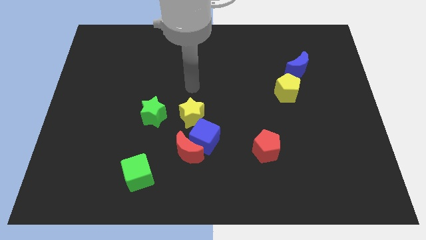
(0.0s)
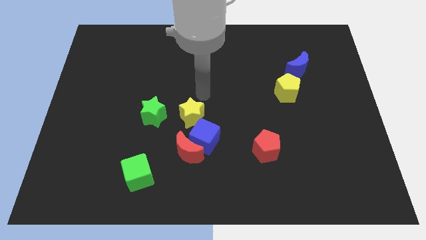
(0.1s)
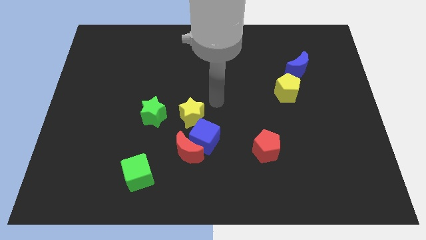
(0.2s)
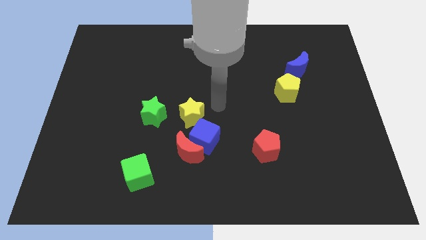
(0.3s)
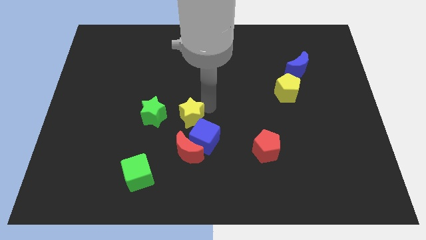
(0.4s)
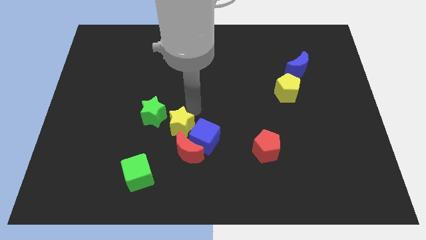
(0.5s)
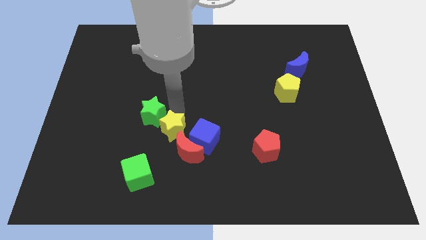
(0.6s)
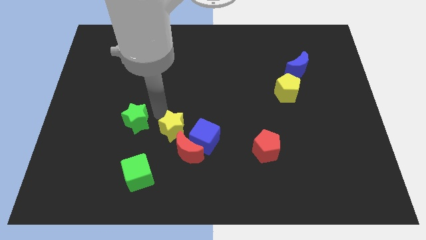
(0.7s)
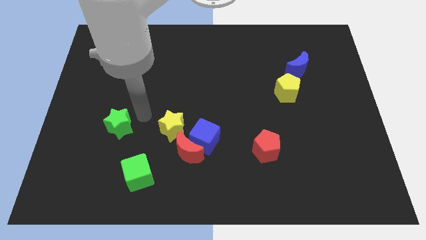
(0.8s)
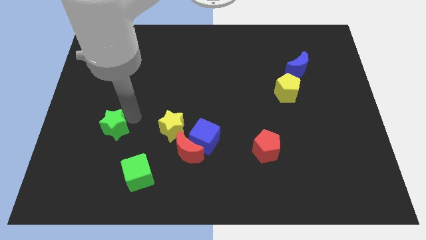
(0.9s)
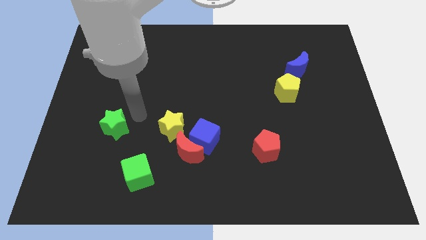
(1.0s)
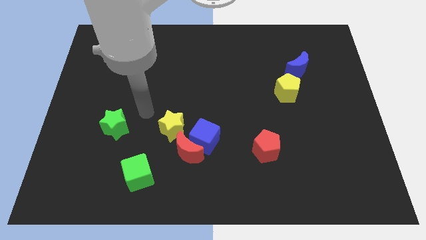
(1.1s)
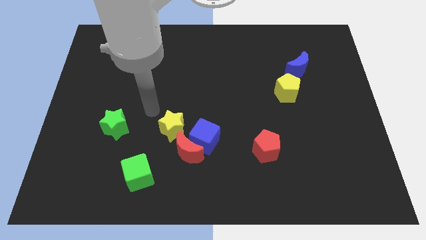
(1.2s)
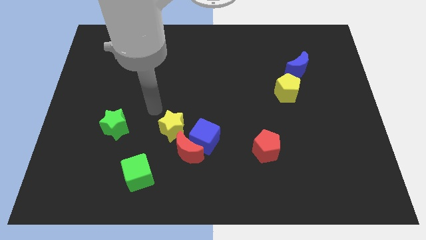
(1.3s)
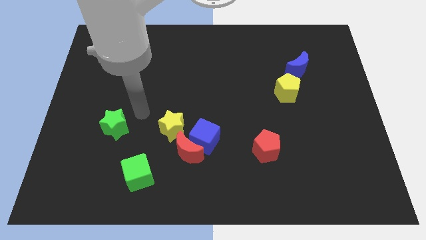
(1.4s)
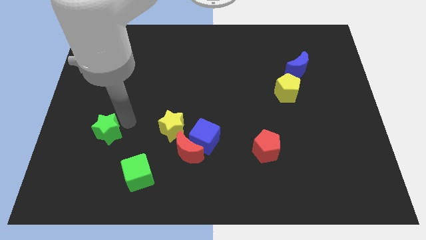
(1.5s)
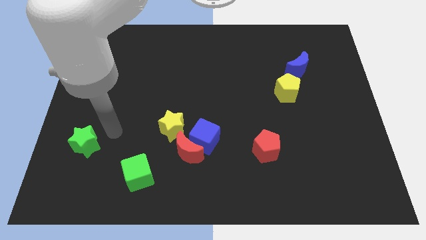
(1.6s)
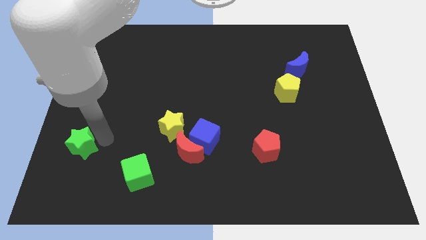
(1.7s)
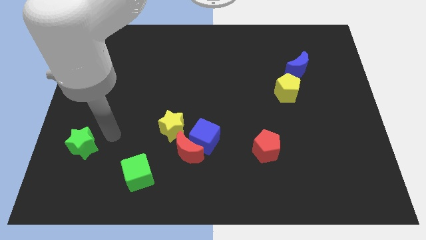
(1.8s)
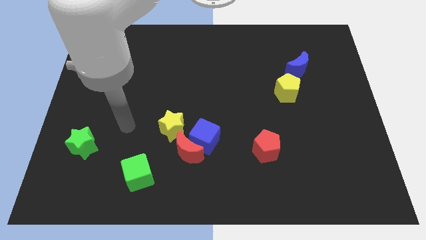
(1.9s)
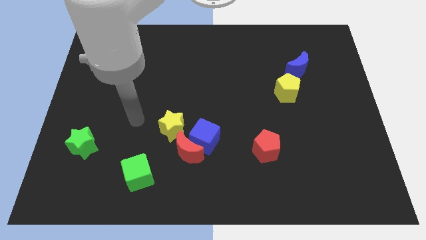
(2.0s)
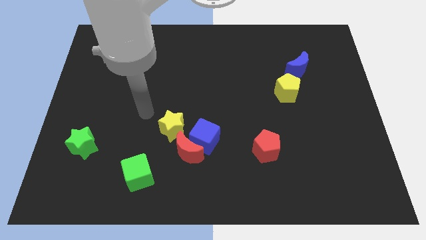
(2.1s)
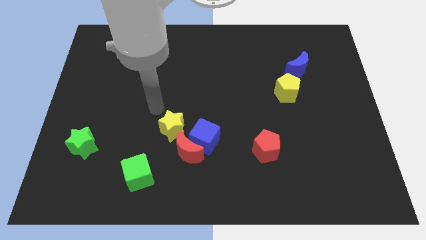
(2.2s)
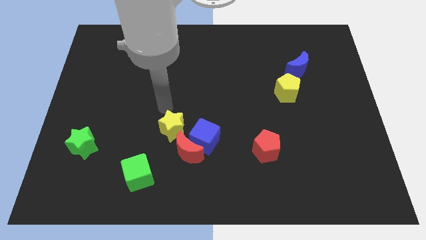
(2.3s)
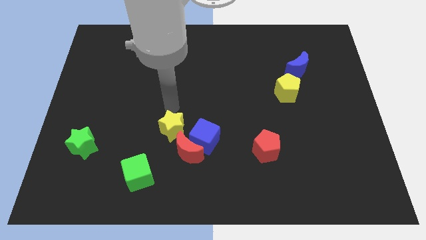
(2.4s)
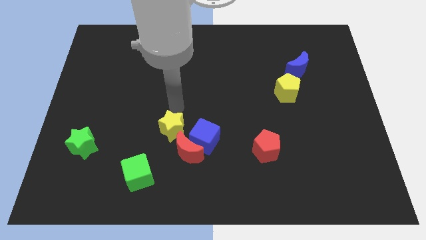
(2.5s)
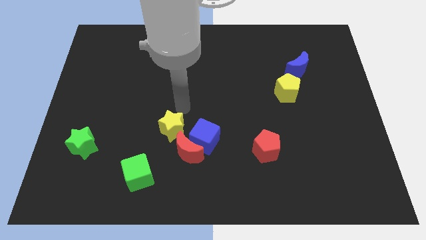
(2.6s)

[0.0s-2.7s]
move the green star towards the top diagonal left of the green cube

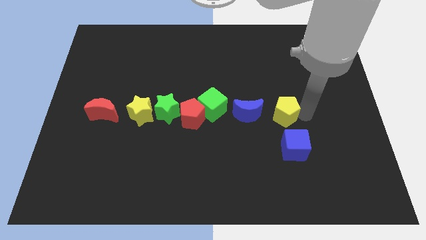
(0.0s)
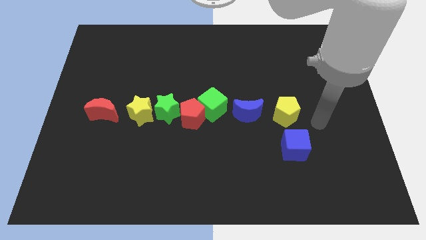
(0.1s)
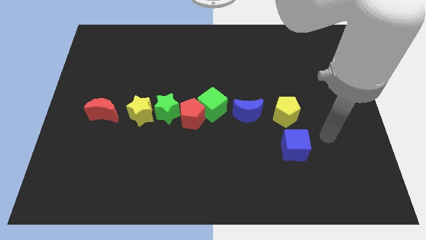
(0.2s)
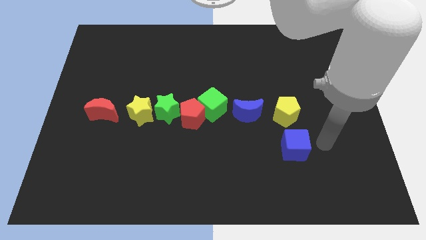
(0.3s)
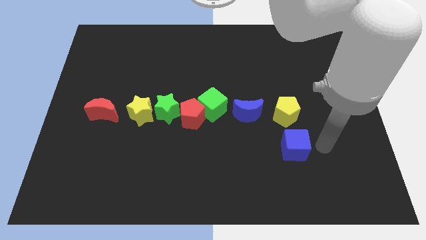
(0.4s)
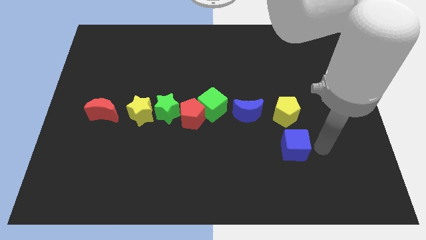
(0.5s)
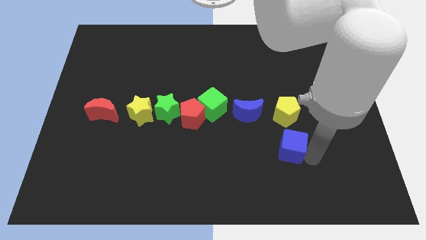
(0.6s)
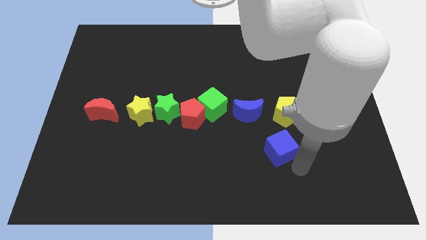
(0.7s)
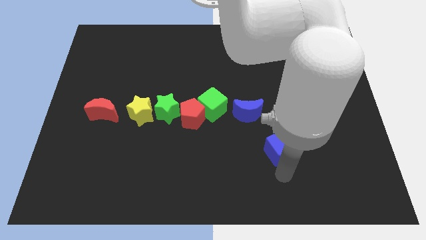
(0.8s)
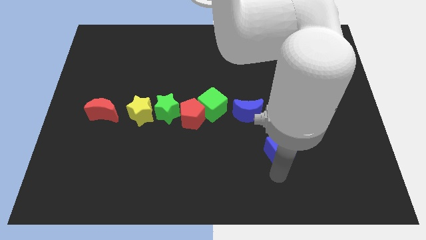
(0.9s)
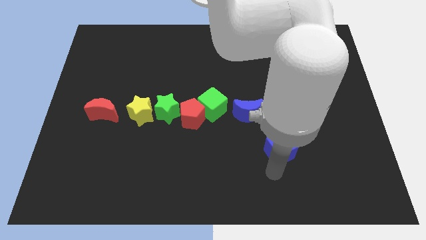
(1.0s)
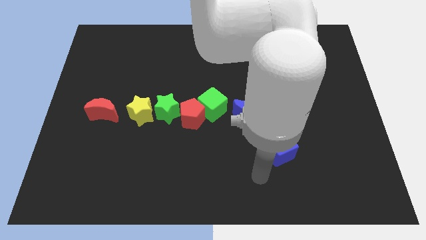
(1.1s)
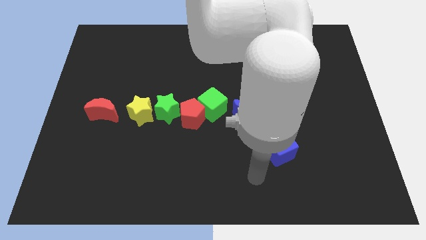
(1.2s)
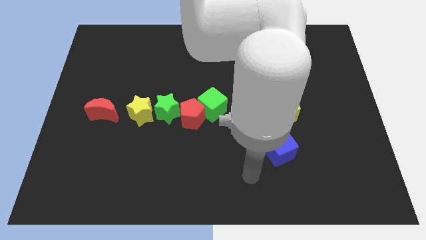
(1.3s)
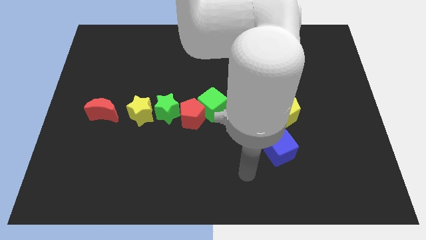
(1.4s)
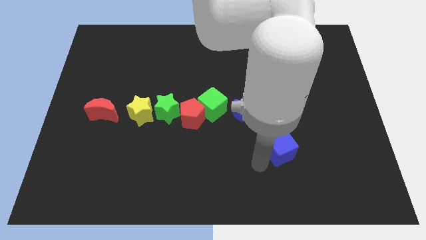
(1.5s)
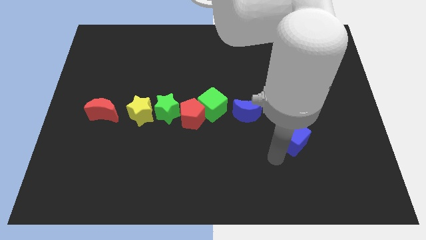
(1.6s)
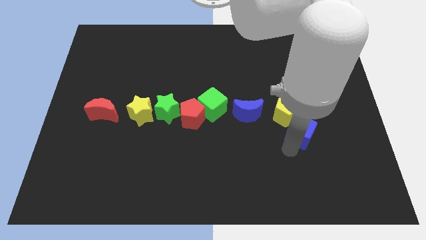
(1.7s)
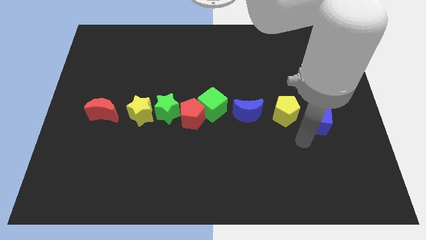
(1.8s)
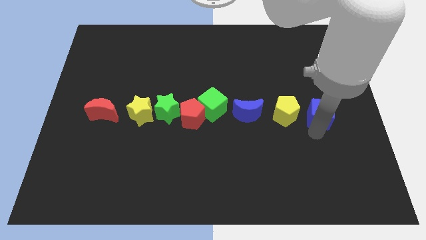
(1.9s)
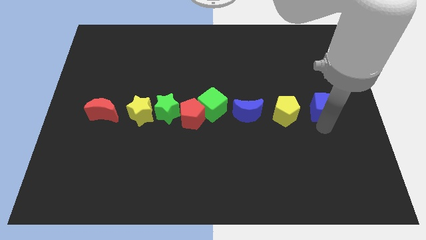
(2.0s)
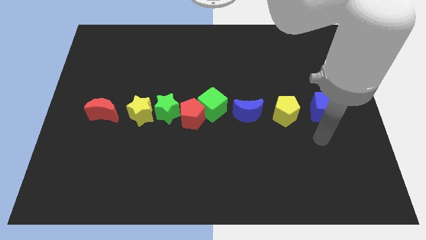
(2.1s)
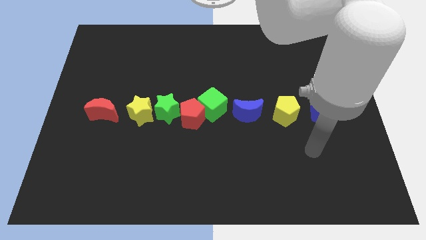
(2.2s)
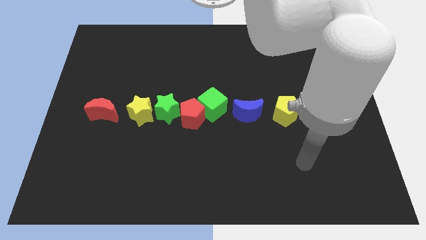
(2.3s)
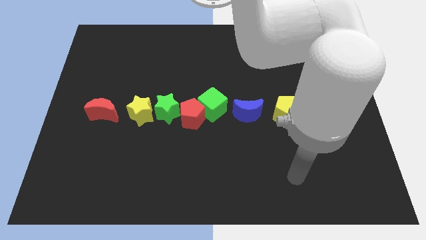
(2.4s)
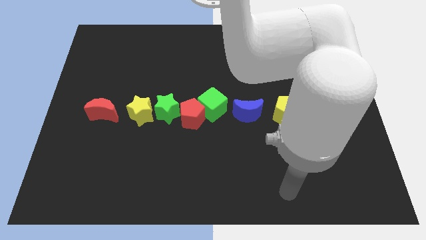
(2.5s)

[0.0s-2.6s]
push the blue cube right side of the yellow pentagon

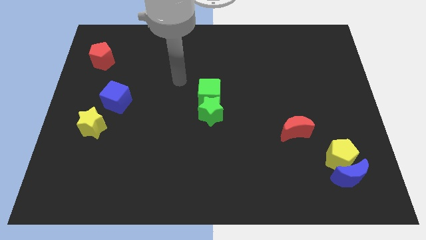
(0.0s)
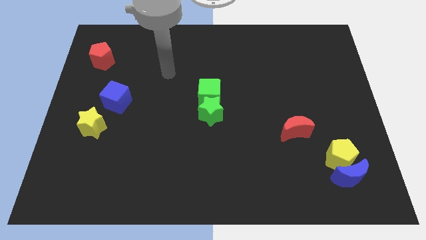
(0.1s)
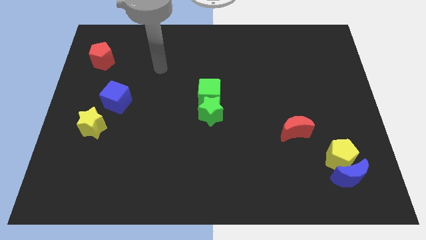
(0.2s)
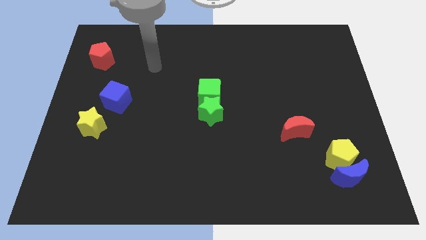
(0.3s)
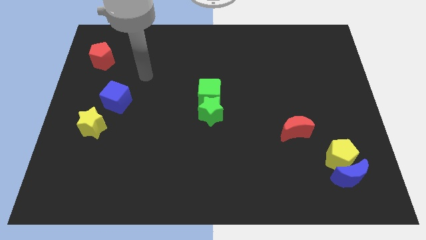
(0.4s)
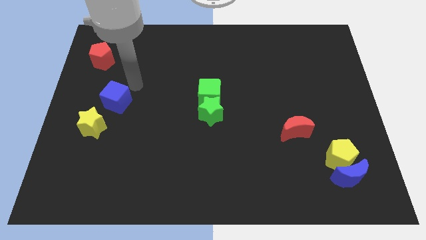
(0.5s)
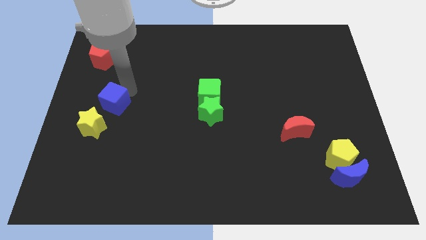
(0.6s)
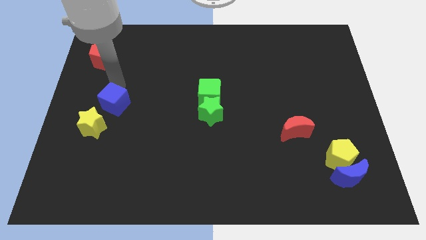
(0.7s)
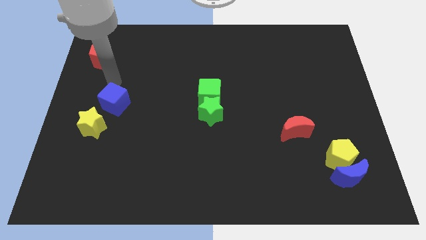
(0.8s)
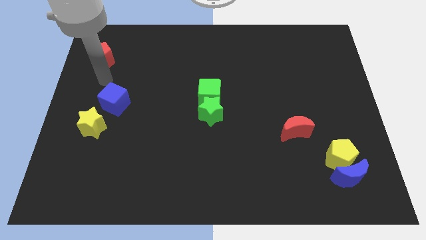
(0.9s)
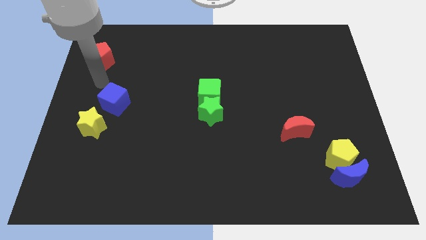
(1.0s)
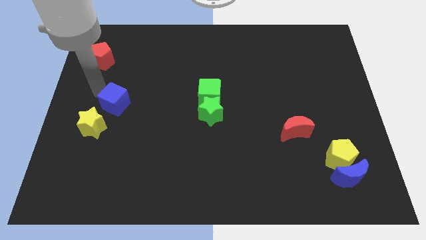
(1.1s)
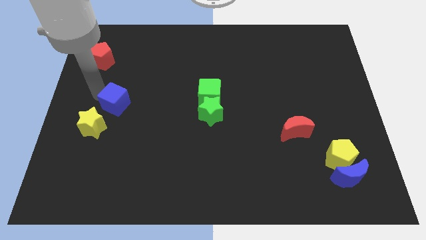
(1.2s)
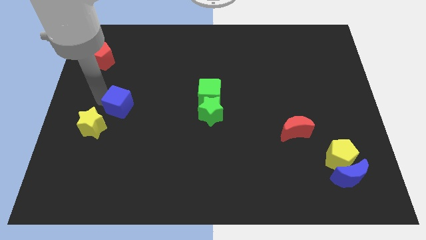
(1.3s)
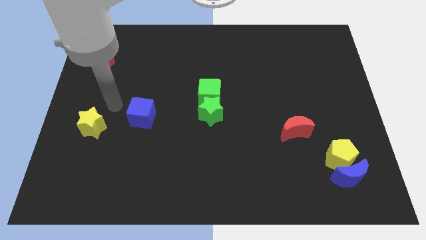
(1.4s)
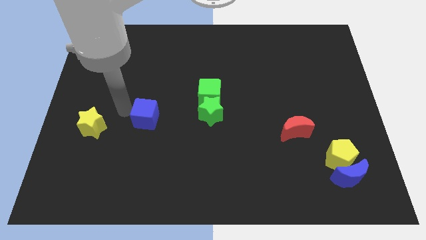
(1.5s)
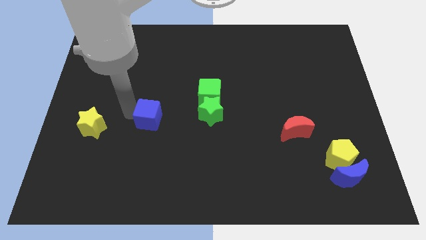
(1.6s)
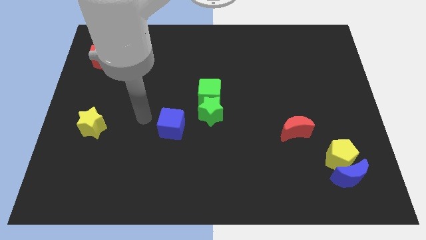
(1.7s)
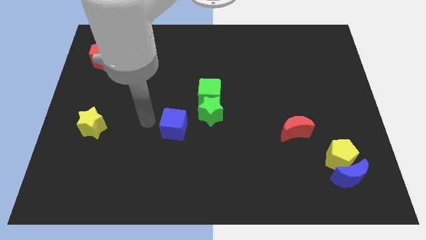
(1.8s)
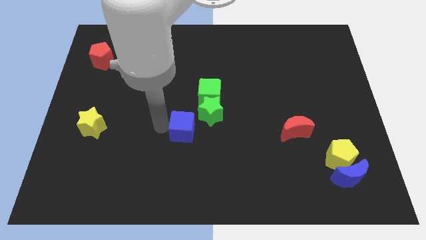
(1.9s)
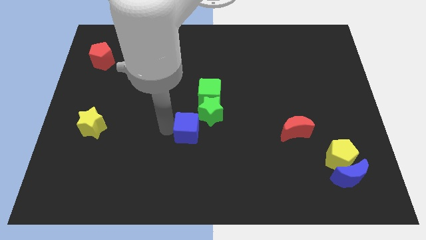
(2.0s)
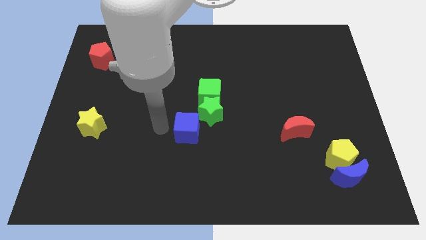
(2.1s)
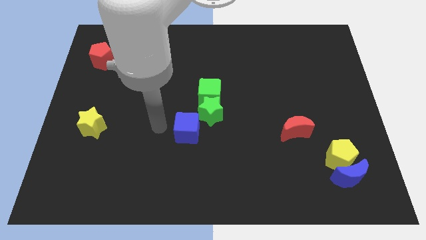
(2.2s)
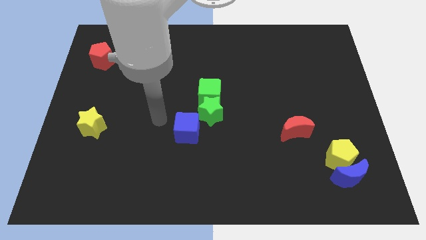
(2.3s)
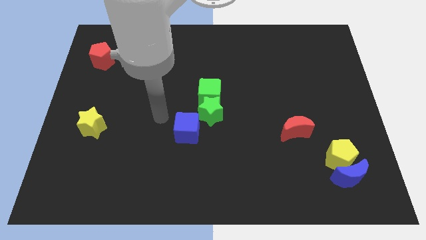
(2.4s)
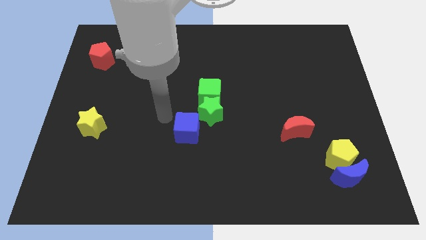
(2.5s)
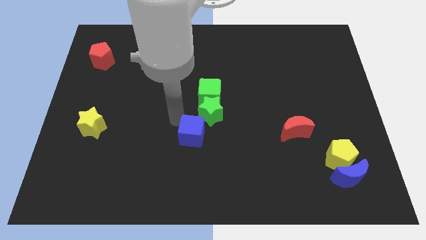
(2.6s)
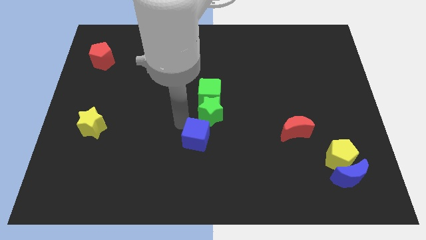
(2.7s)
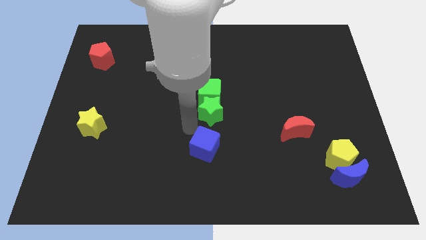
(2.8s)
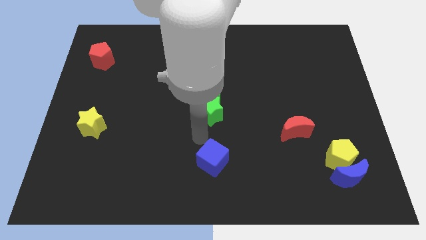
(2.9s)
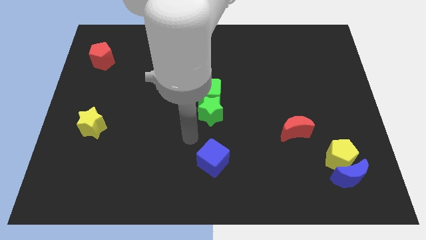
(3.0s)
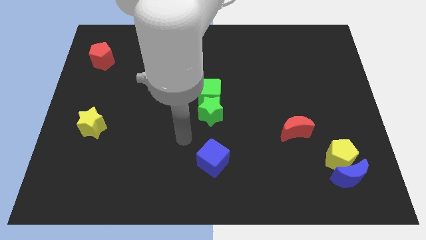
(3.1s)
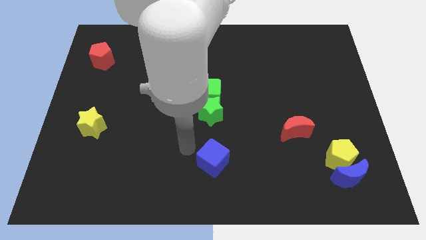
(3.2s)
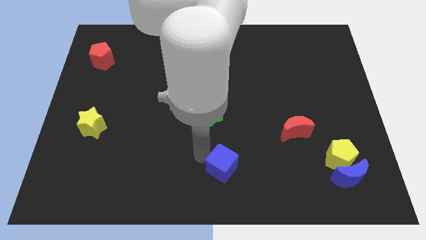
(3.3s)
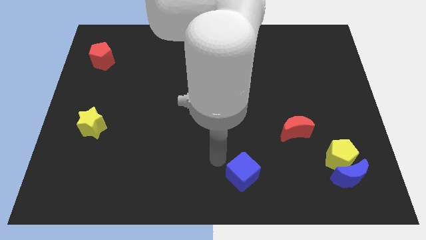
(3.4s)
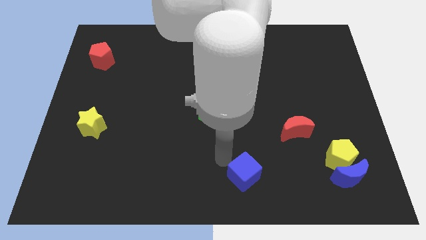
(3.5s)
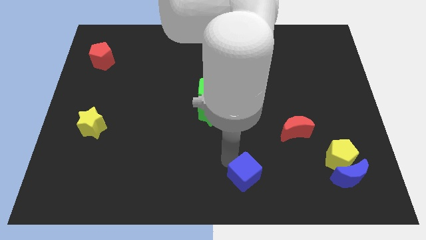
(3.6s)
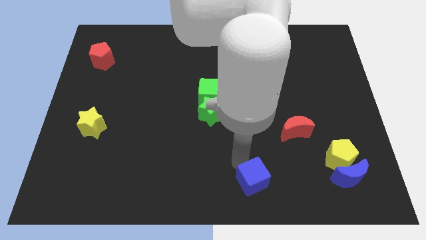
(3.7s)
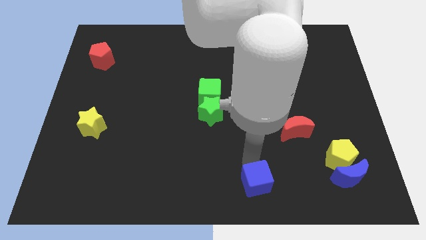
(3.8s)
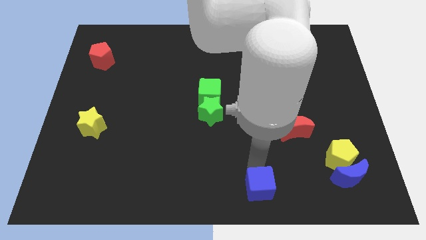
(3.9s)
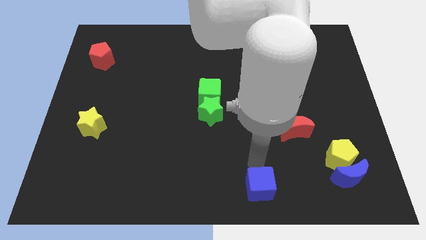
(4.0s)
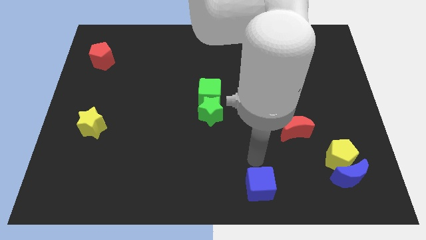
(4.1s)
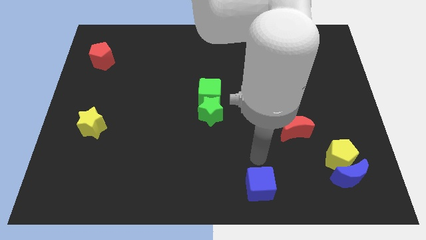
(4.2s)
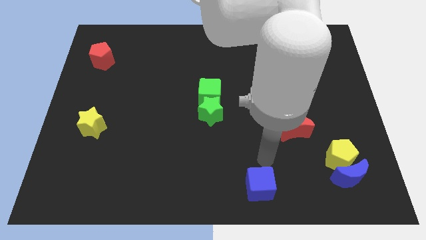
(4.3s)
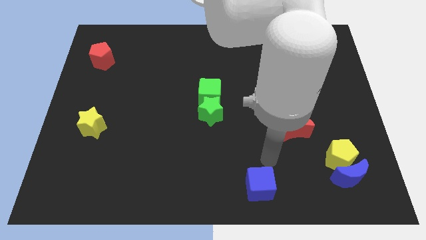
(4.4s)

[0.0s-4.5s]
move the blue cube towards the blue crescent
